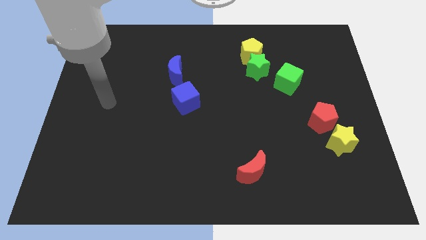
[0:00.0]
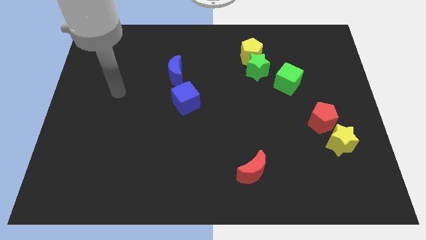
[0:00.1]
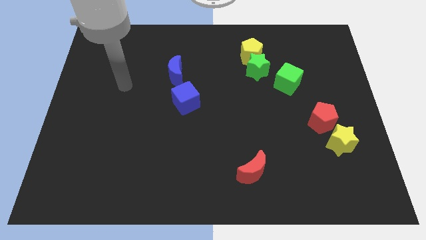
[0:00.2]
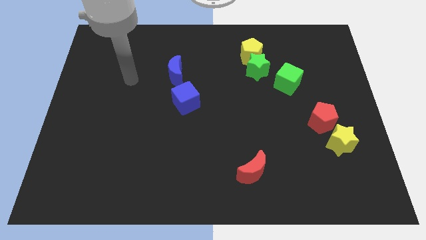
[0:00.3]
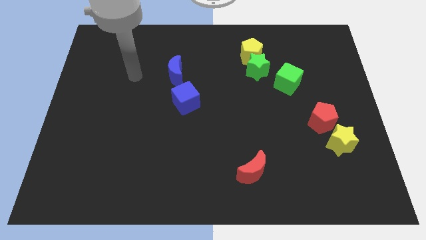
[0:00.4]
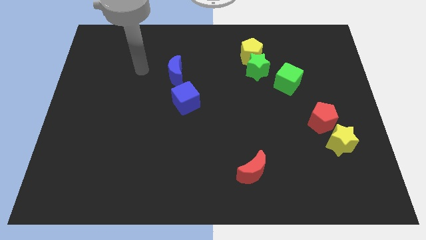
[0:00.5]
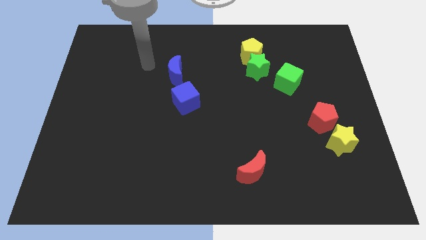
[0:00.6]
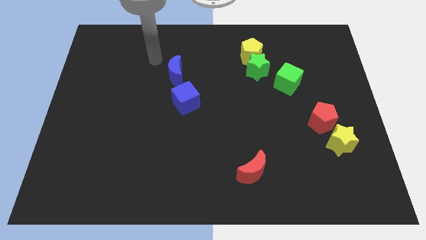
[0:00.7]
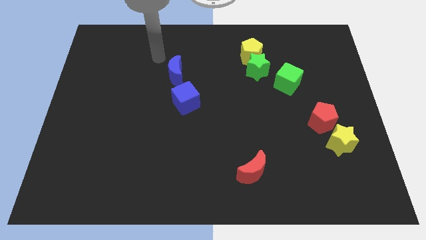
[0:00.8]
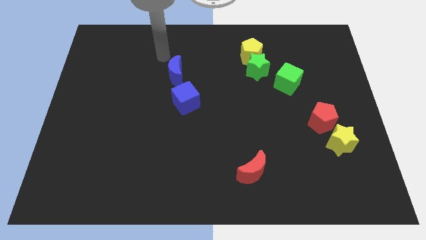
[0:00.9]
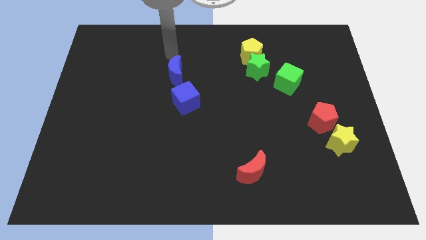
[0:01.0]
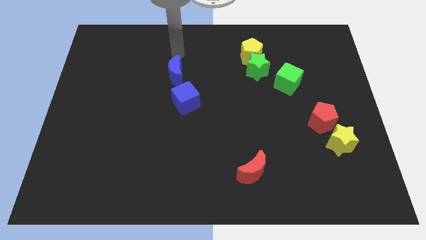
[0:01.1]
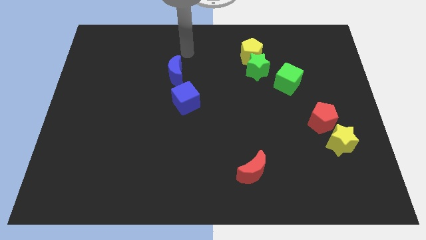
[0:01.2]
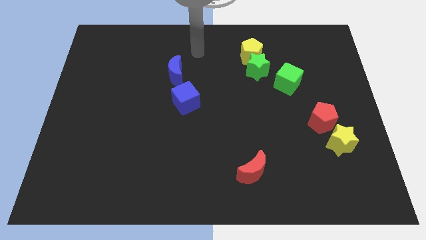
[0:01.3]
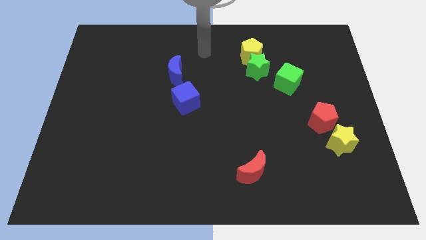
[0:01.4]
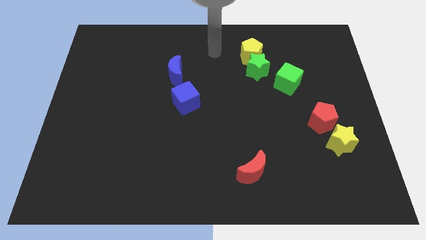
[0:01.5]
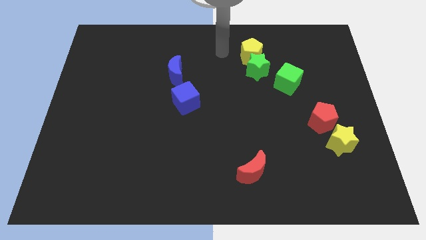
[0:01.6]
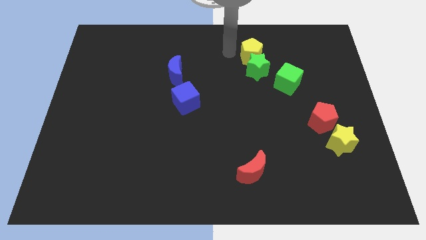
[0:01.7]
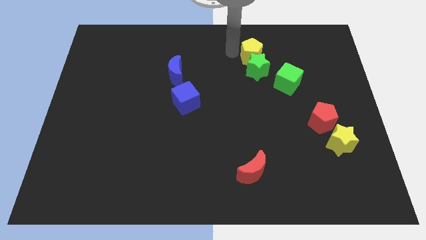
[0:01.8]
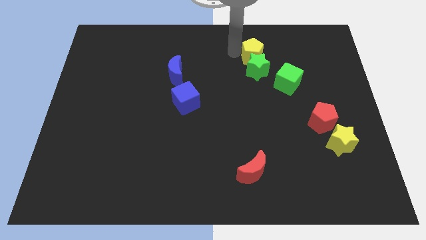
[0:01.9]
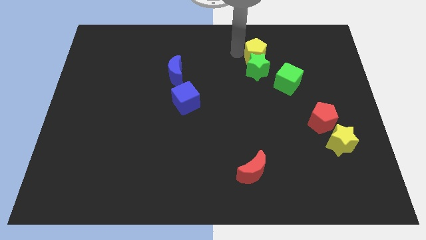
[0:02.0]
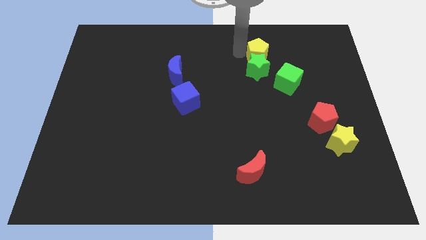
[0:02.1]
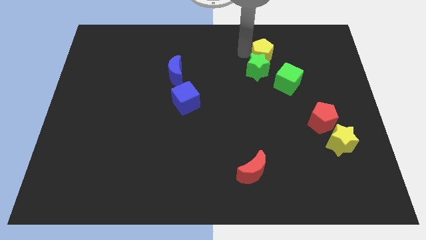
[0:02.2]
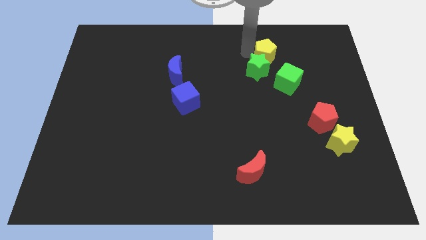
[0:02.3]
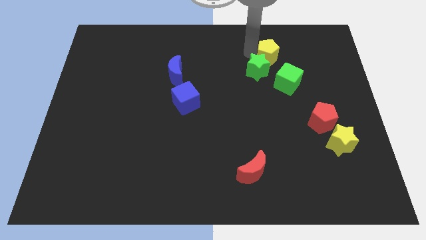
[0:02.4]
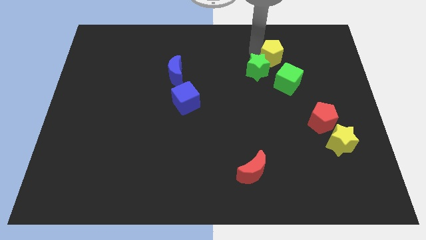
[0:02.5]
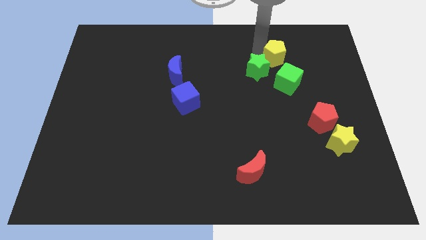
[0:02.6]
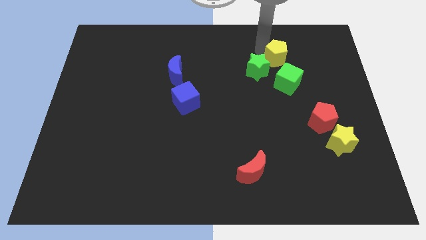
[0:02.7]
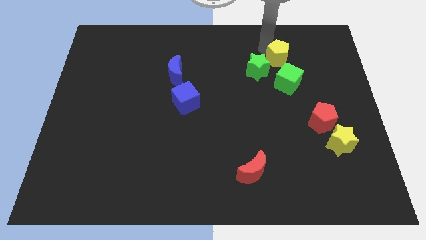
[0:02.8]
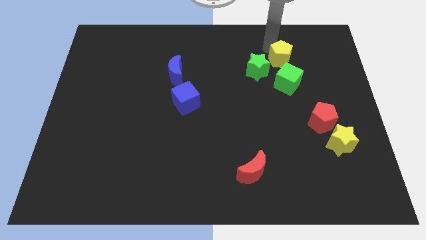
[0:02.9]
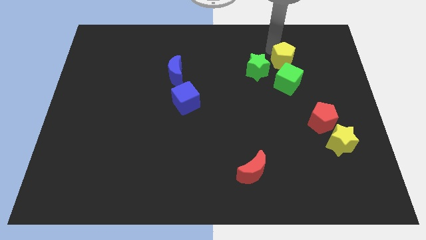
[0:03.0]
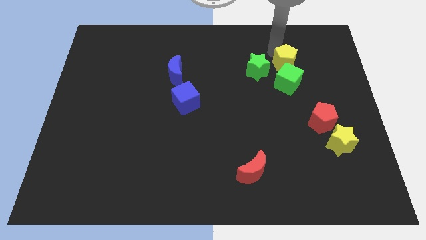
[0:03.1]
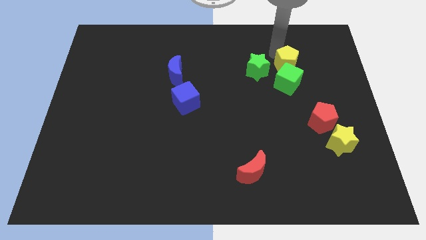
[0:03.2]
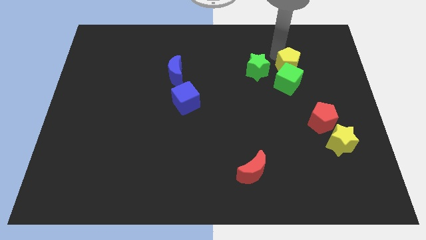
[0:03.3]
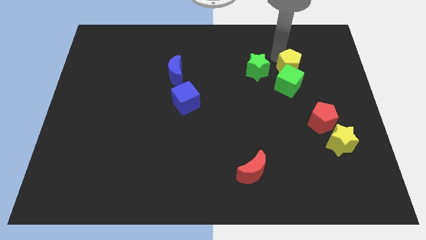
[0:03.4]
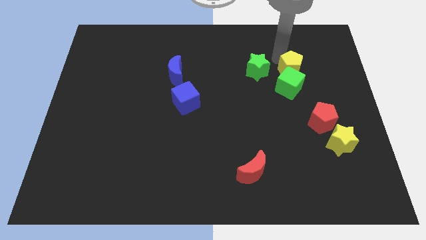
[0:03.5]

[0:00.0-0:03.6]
put the yellow pentagon close to the green cube

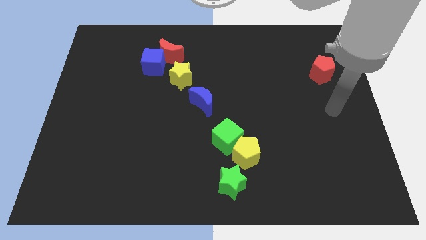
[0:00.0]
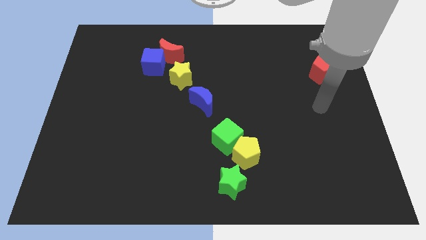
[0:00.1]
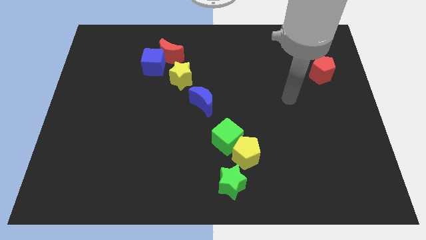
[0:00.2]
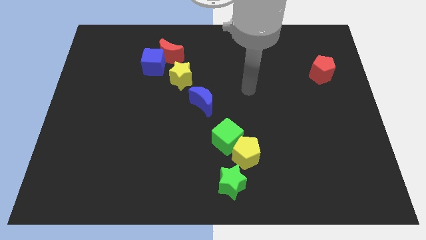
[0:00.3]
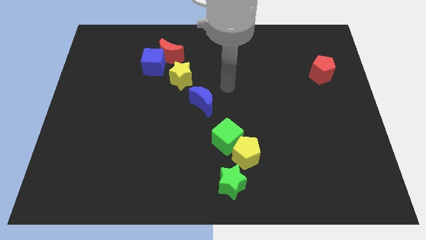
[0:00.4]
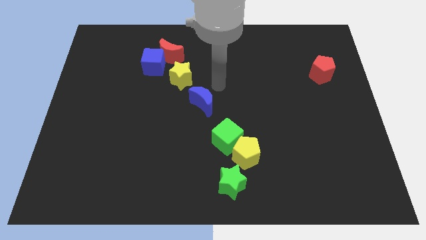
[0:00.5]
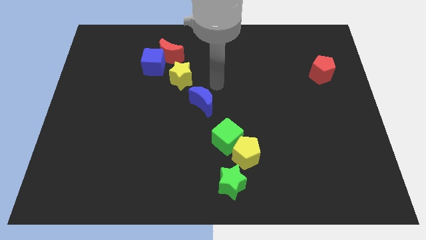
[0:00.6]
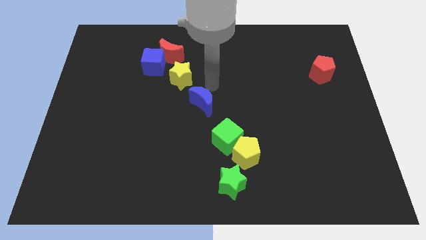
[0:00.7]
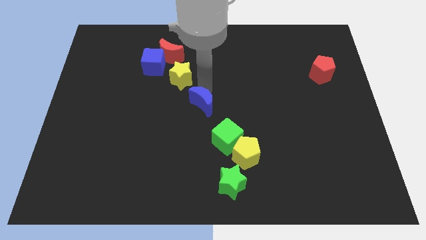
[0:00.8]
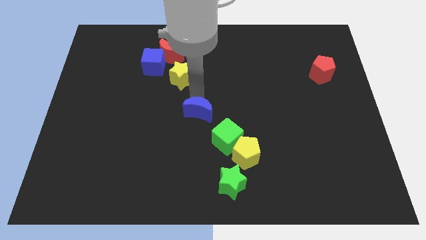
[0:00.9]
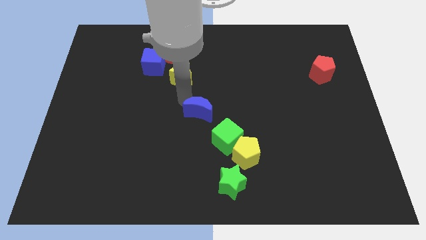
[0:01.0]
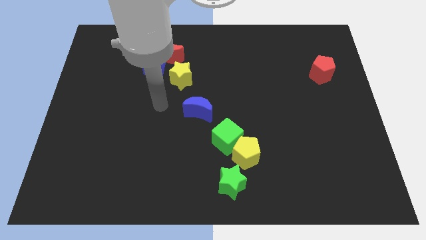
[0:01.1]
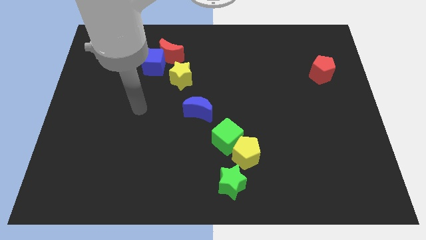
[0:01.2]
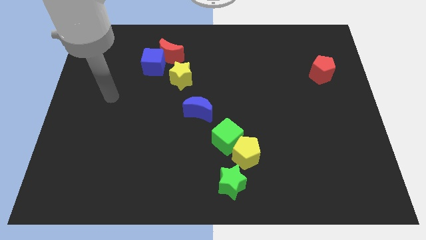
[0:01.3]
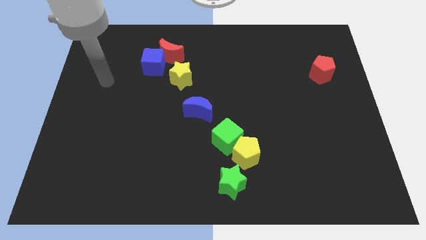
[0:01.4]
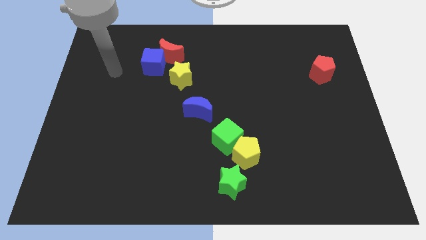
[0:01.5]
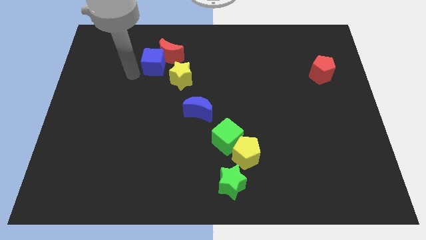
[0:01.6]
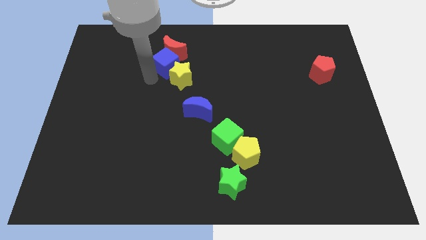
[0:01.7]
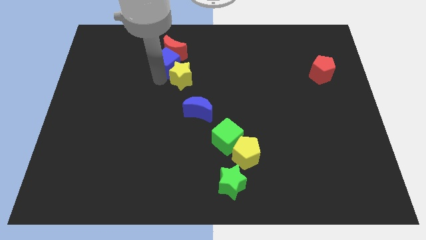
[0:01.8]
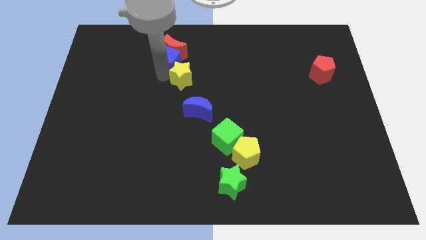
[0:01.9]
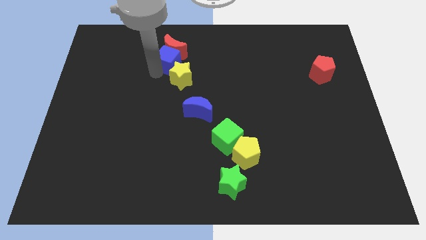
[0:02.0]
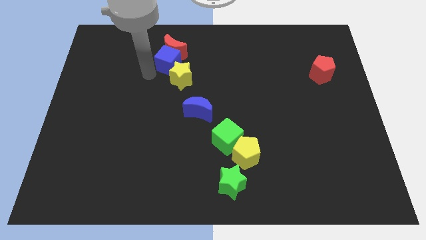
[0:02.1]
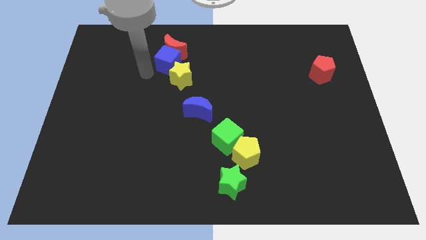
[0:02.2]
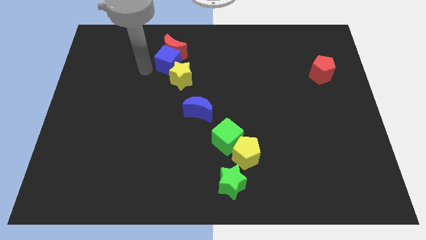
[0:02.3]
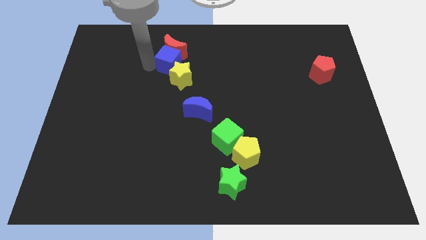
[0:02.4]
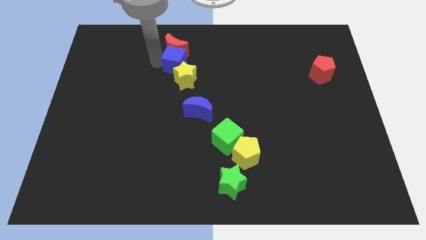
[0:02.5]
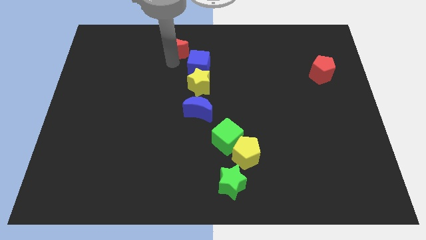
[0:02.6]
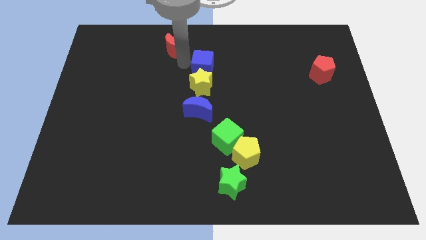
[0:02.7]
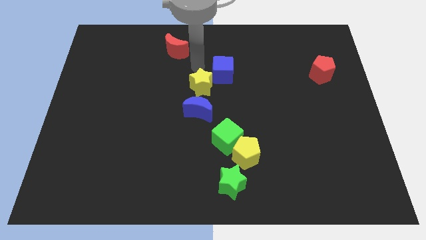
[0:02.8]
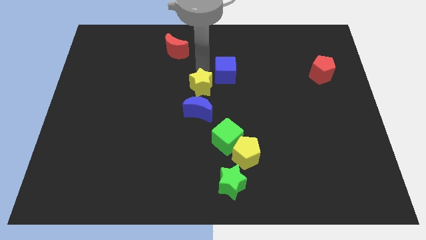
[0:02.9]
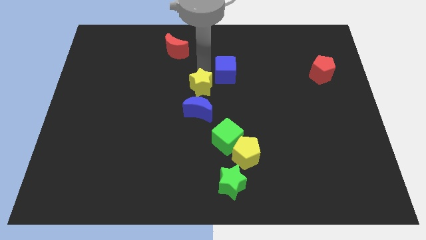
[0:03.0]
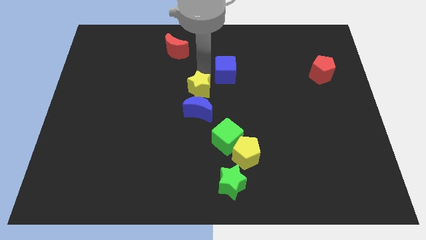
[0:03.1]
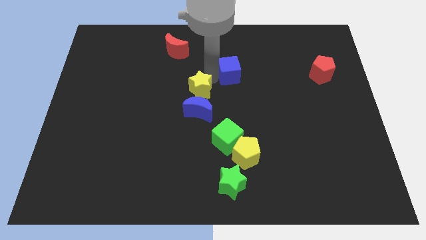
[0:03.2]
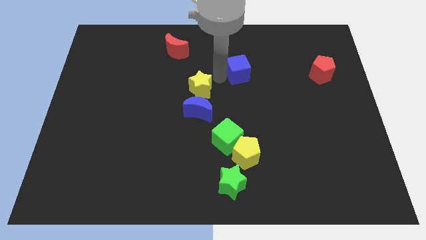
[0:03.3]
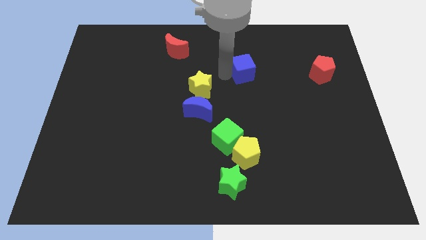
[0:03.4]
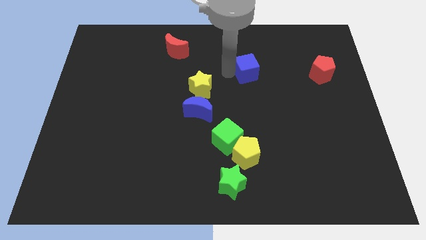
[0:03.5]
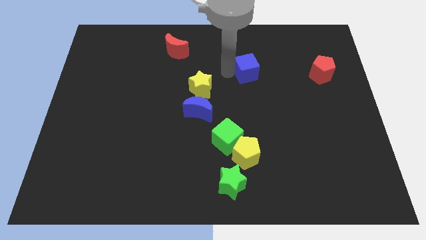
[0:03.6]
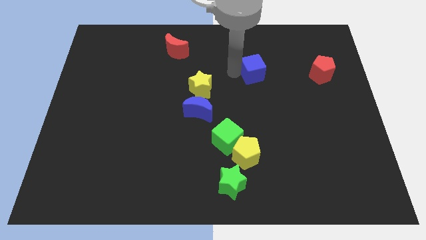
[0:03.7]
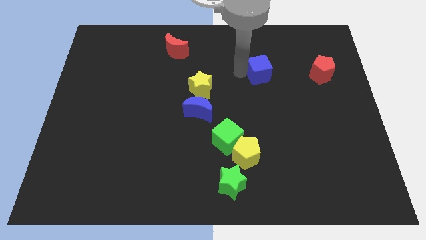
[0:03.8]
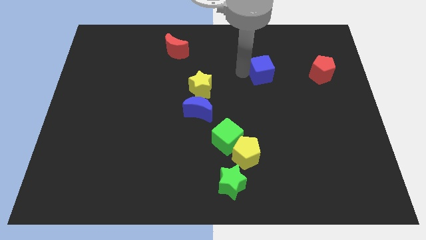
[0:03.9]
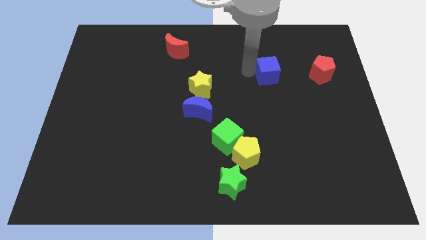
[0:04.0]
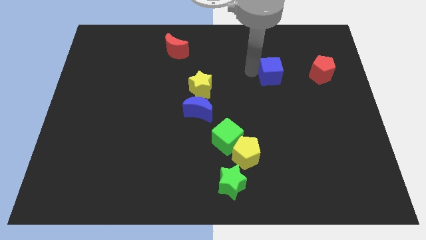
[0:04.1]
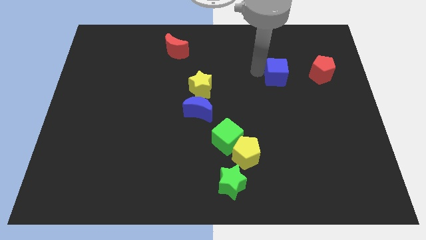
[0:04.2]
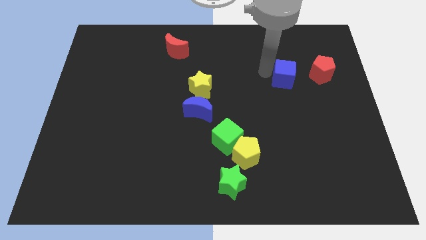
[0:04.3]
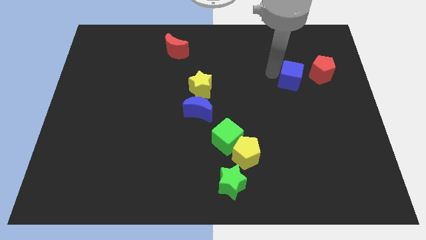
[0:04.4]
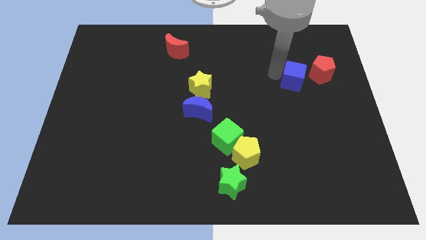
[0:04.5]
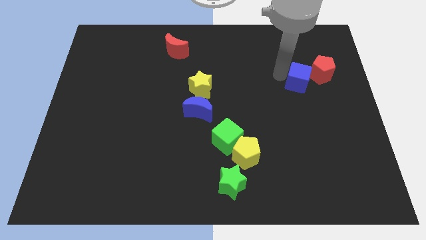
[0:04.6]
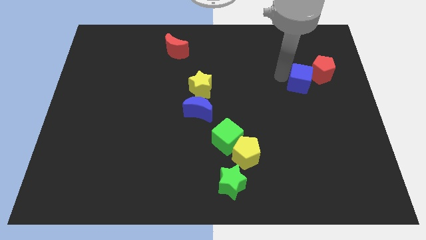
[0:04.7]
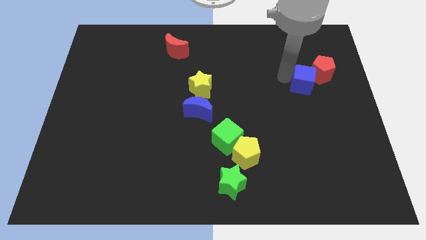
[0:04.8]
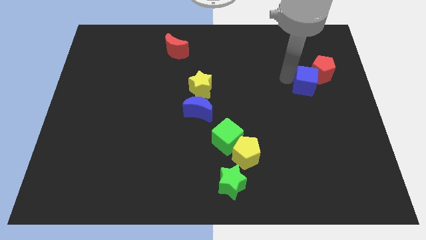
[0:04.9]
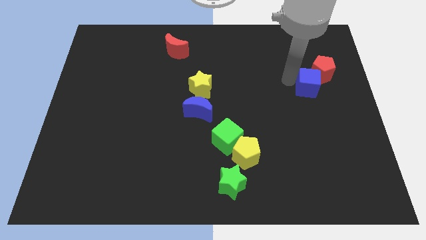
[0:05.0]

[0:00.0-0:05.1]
slide the blue cube close to the red pentagon

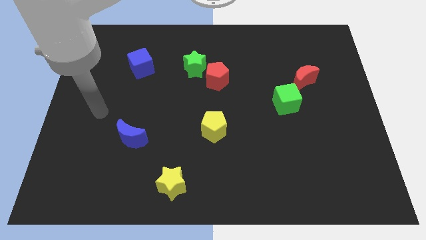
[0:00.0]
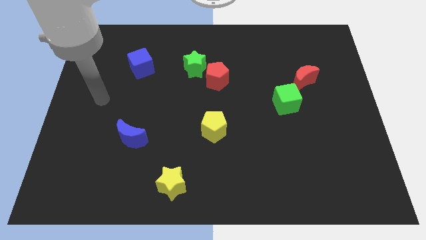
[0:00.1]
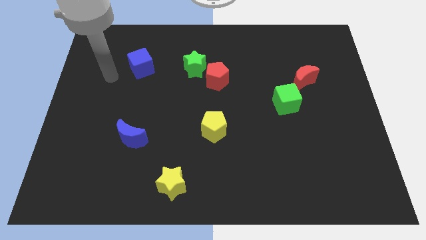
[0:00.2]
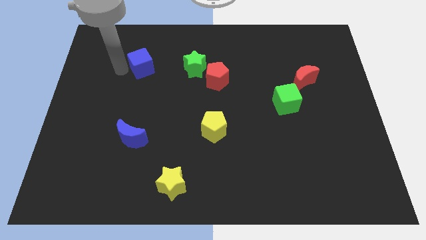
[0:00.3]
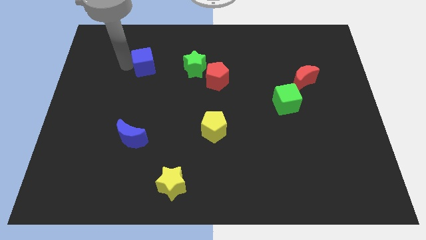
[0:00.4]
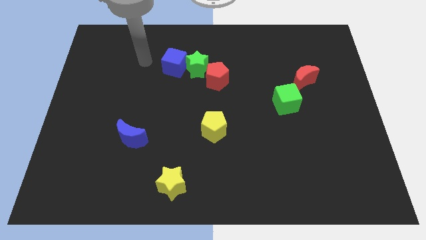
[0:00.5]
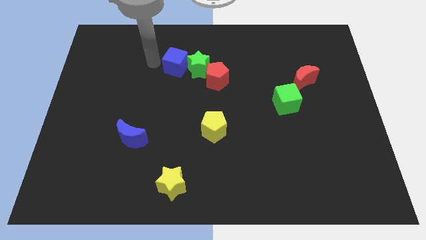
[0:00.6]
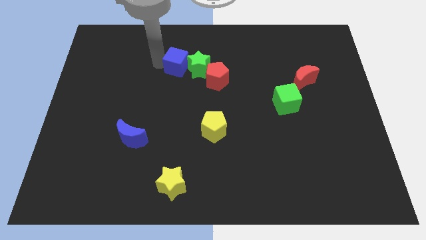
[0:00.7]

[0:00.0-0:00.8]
put the blue cube to the green star
